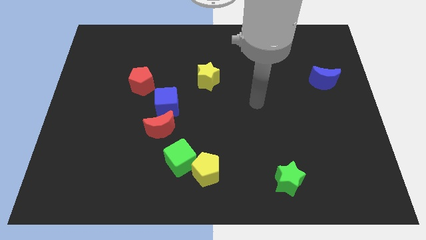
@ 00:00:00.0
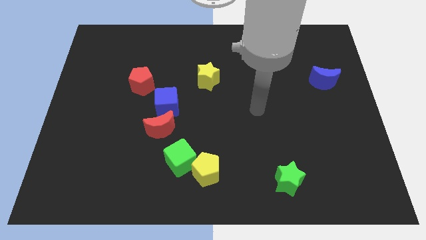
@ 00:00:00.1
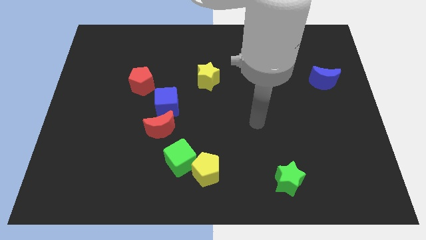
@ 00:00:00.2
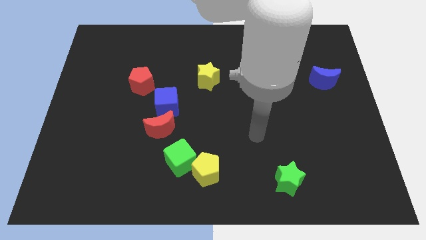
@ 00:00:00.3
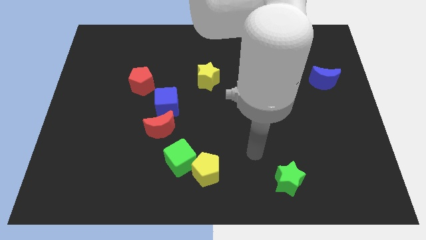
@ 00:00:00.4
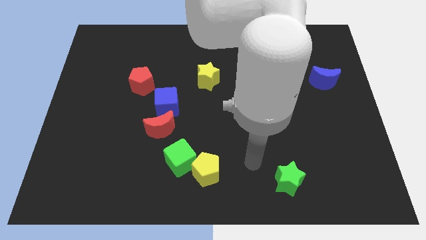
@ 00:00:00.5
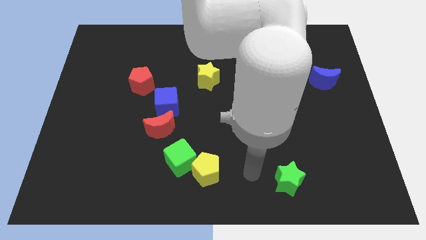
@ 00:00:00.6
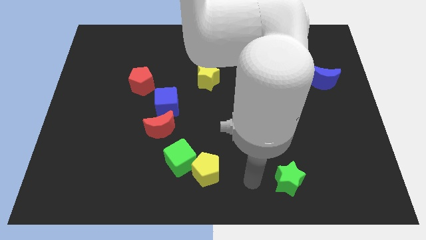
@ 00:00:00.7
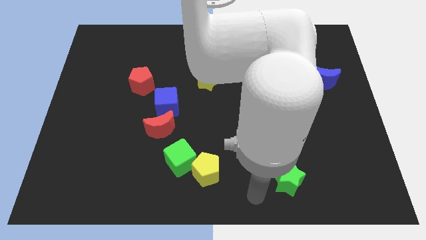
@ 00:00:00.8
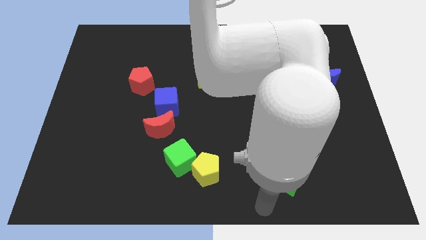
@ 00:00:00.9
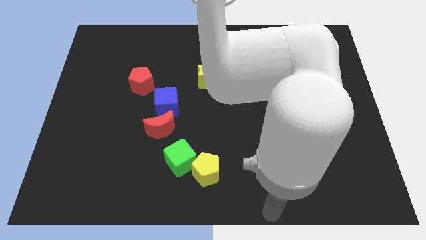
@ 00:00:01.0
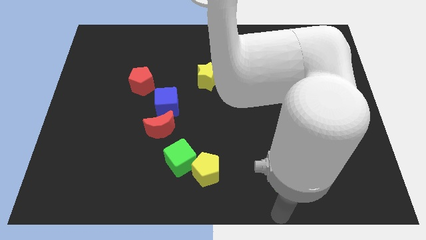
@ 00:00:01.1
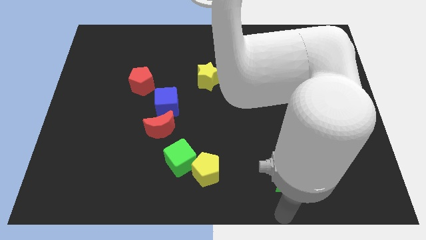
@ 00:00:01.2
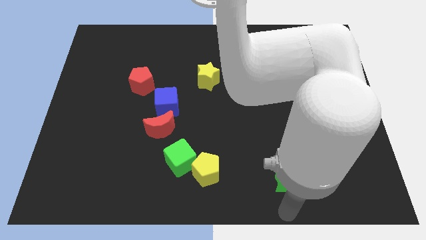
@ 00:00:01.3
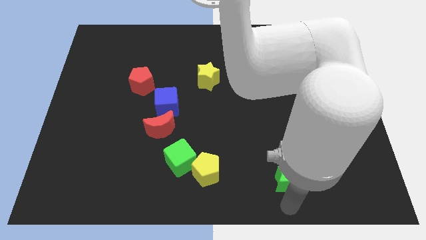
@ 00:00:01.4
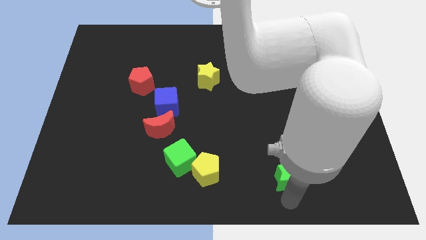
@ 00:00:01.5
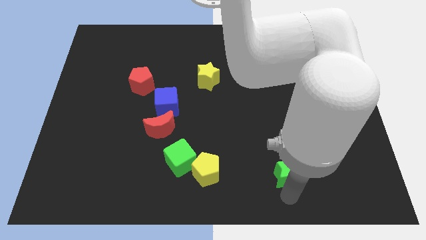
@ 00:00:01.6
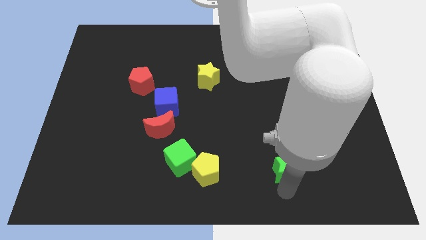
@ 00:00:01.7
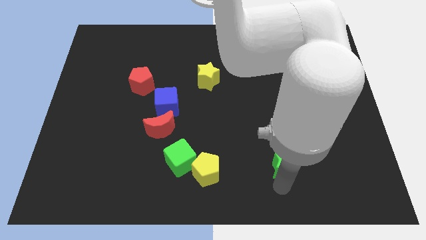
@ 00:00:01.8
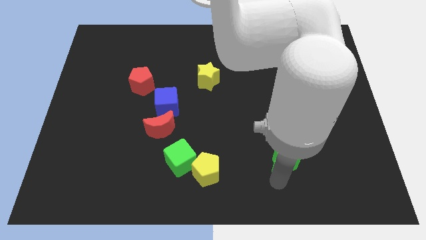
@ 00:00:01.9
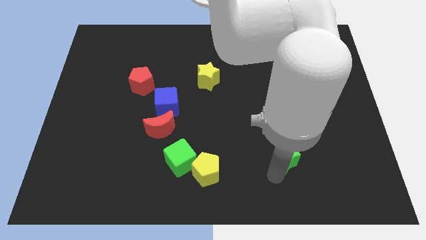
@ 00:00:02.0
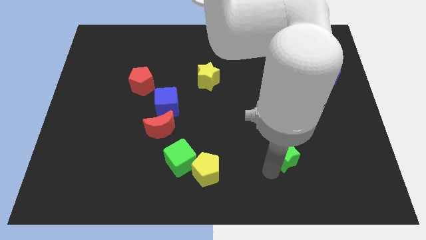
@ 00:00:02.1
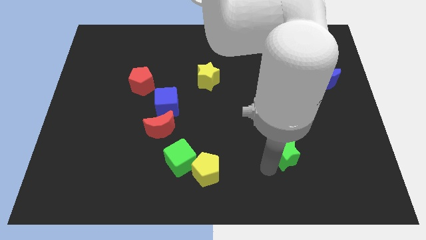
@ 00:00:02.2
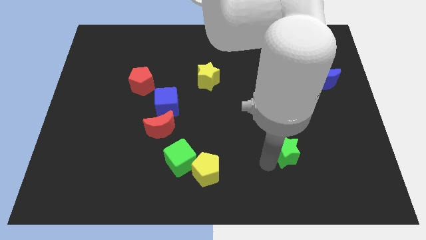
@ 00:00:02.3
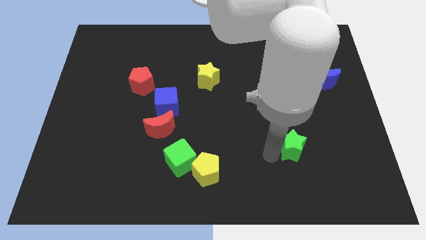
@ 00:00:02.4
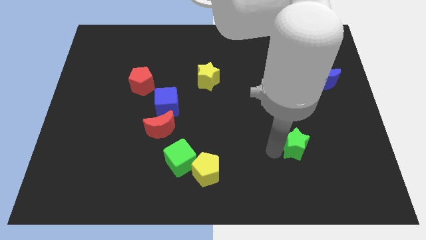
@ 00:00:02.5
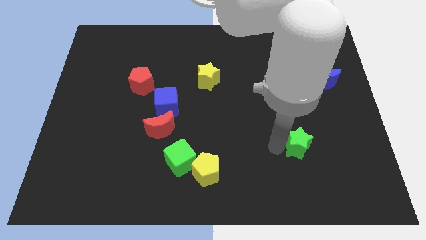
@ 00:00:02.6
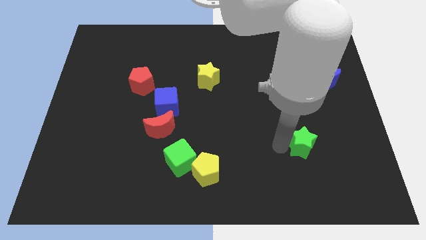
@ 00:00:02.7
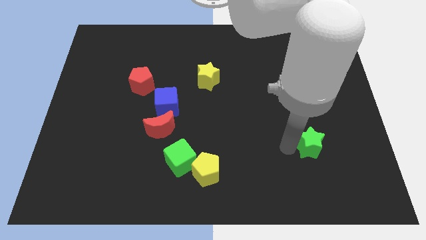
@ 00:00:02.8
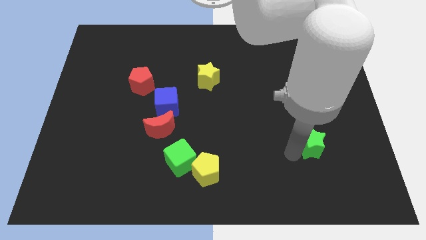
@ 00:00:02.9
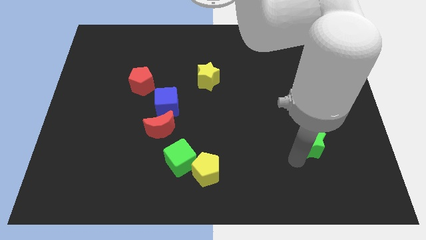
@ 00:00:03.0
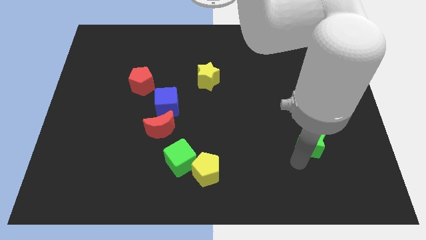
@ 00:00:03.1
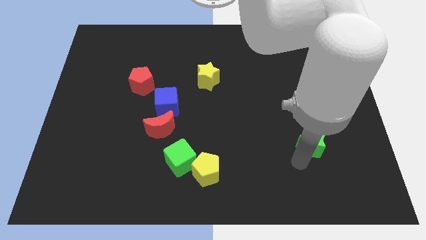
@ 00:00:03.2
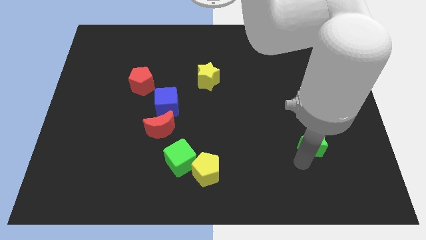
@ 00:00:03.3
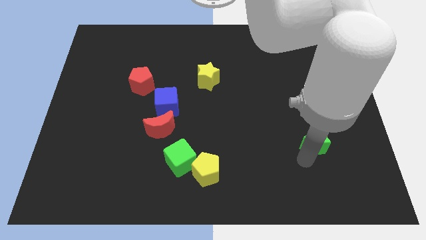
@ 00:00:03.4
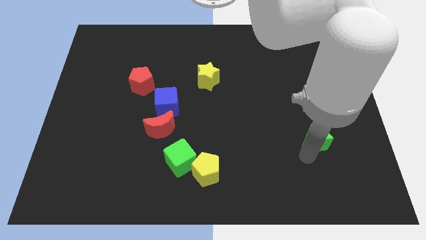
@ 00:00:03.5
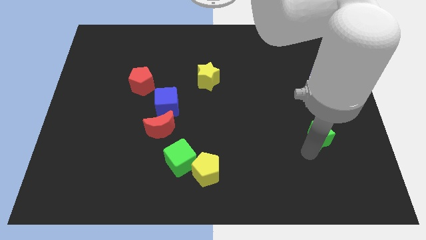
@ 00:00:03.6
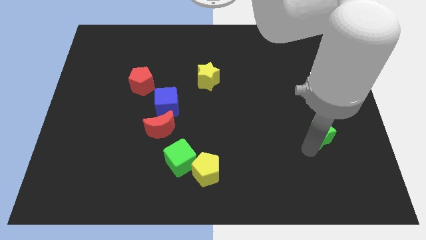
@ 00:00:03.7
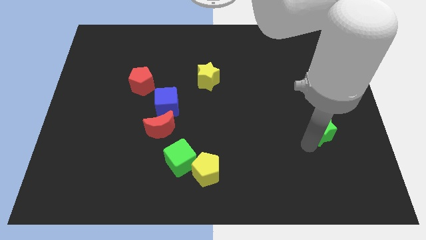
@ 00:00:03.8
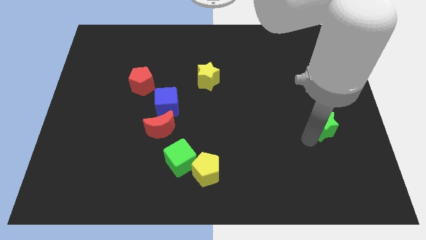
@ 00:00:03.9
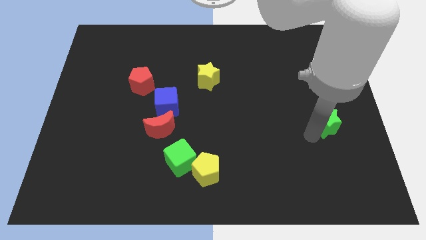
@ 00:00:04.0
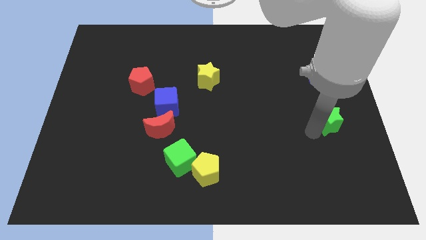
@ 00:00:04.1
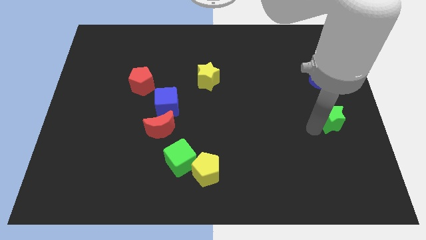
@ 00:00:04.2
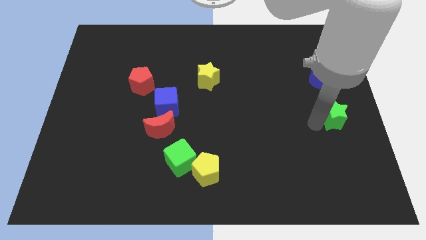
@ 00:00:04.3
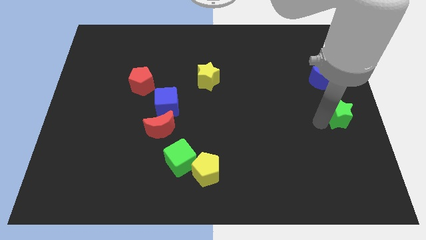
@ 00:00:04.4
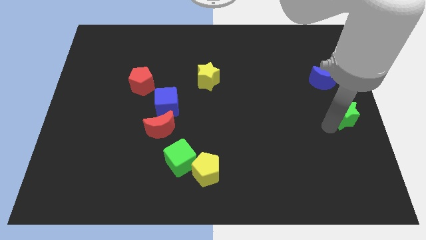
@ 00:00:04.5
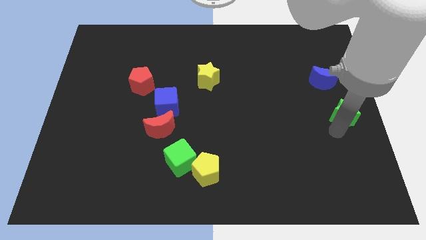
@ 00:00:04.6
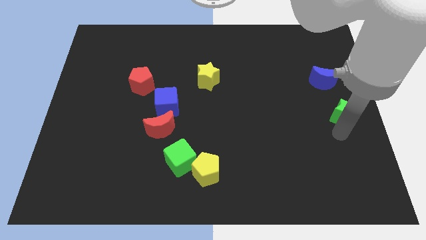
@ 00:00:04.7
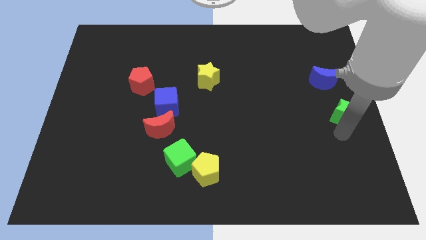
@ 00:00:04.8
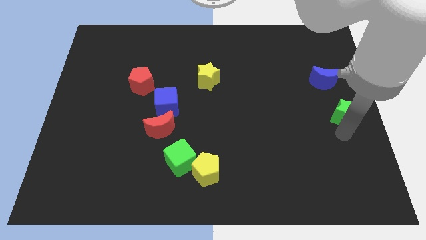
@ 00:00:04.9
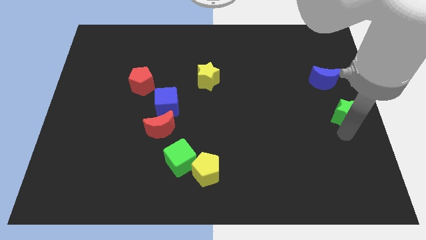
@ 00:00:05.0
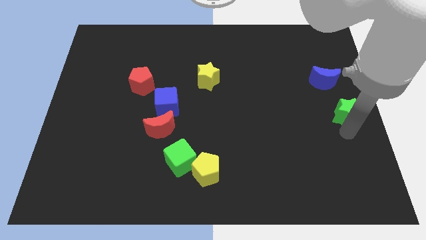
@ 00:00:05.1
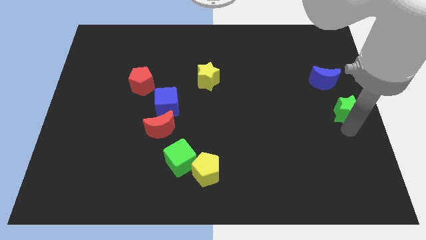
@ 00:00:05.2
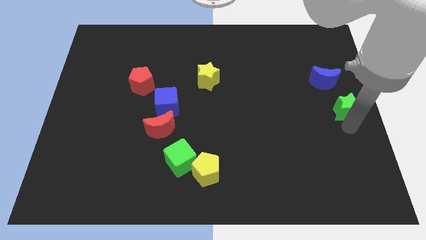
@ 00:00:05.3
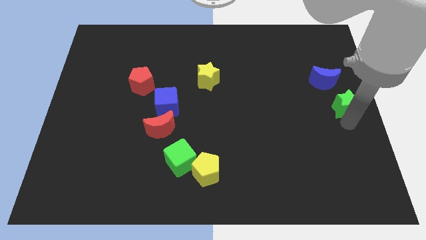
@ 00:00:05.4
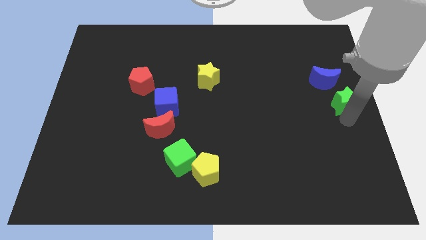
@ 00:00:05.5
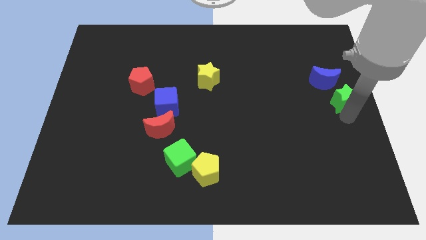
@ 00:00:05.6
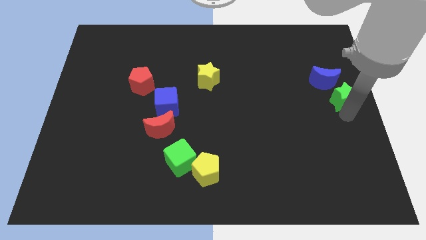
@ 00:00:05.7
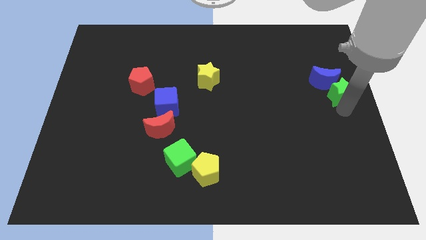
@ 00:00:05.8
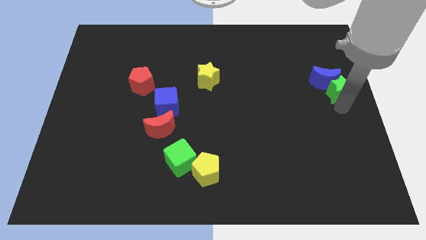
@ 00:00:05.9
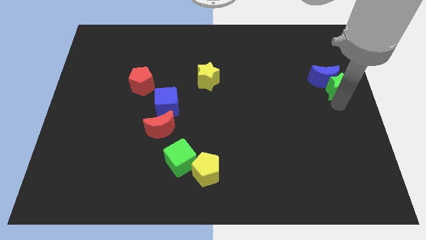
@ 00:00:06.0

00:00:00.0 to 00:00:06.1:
put the green star next to the blue moon

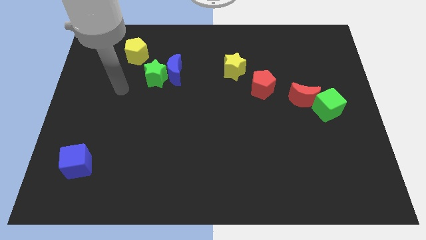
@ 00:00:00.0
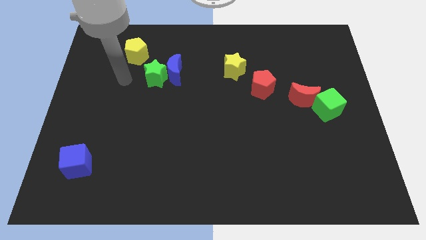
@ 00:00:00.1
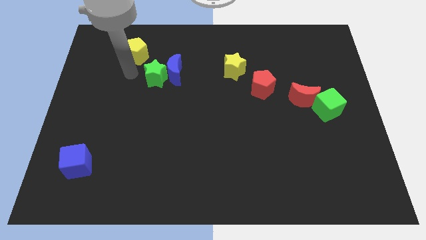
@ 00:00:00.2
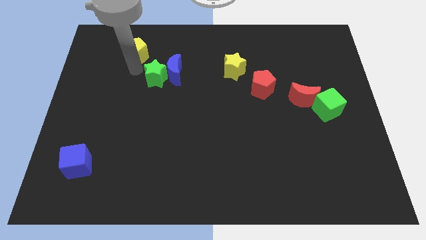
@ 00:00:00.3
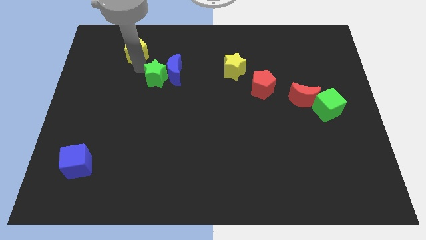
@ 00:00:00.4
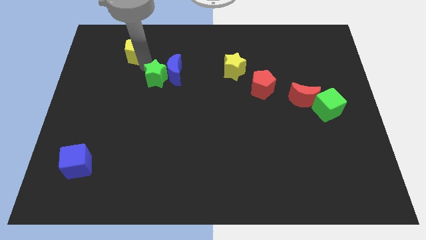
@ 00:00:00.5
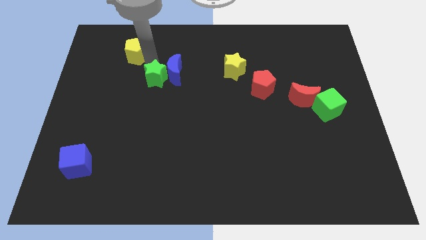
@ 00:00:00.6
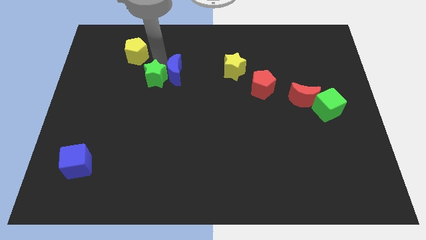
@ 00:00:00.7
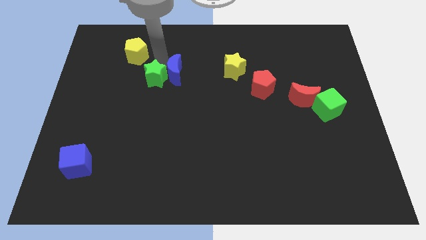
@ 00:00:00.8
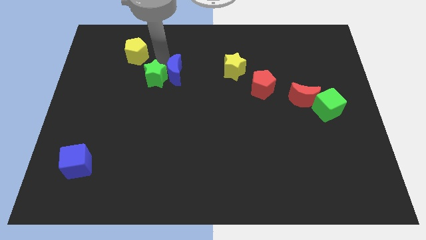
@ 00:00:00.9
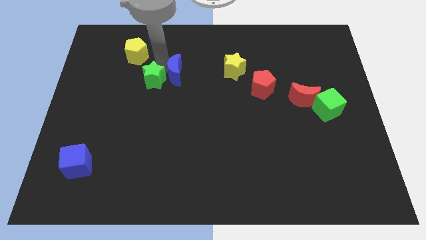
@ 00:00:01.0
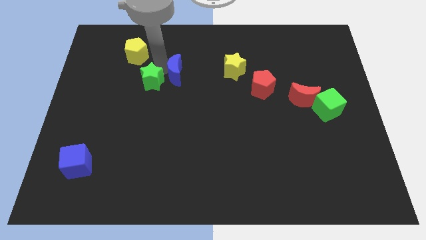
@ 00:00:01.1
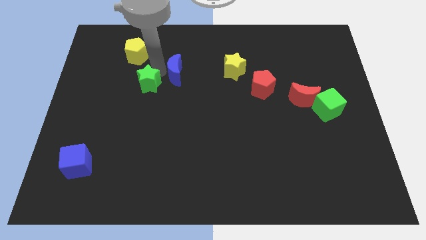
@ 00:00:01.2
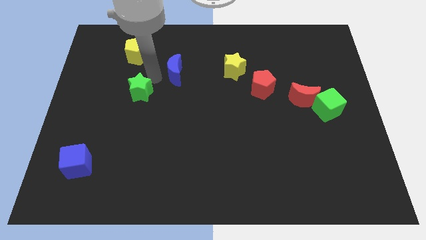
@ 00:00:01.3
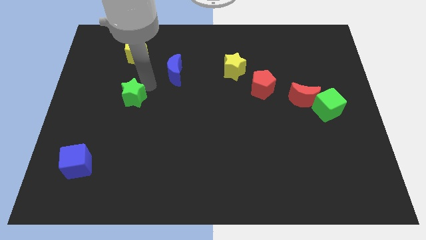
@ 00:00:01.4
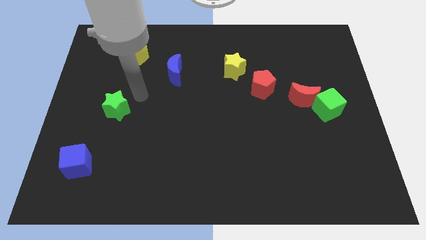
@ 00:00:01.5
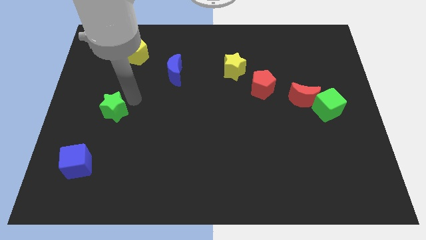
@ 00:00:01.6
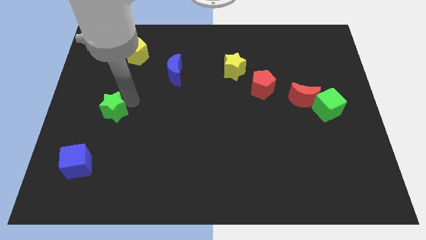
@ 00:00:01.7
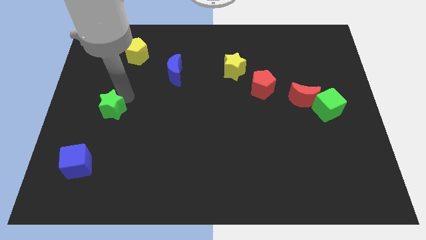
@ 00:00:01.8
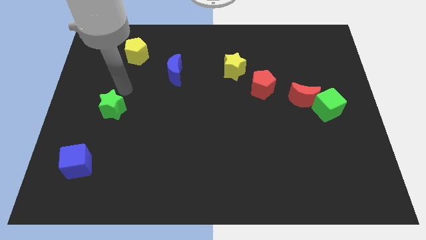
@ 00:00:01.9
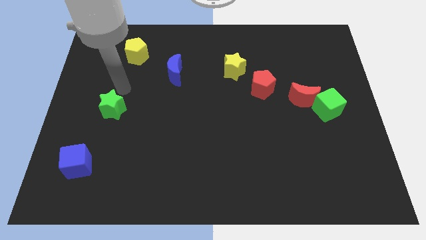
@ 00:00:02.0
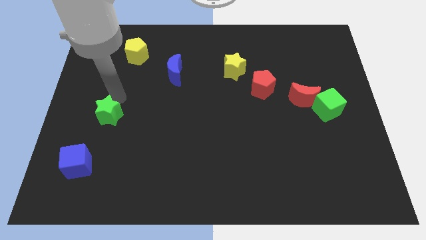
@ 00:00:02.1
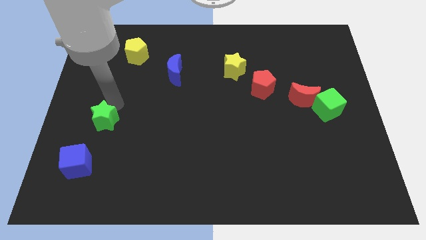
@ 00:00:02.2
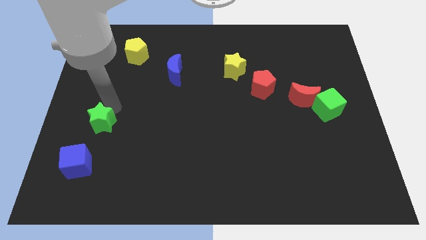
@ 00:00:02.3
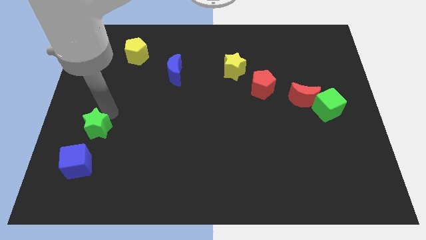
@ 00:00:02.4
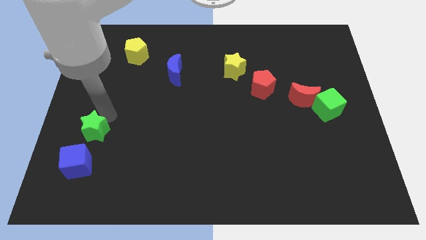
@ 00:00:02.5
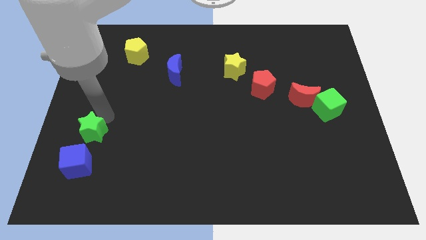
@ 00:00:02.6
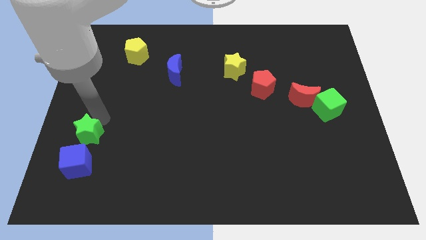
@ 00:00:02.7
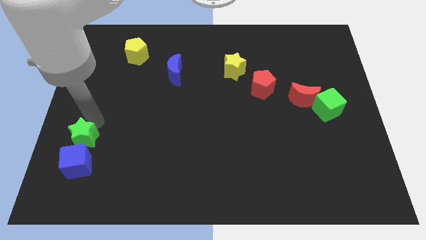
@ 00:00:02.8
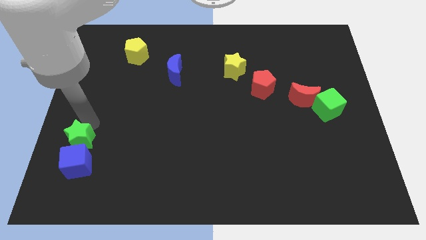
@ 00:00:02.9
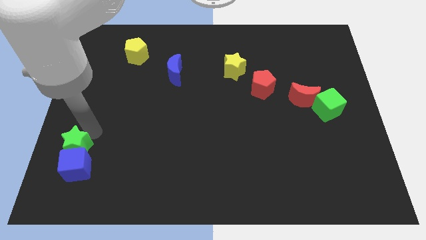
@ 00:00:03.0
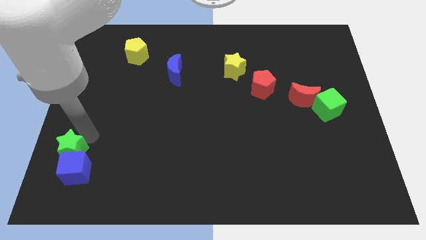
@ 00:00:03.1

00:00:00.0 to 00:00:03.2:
push the green star close to the blue cube
